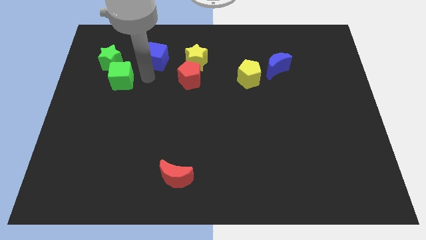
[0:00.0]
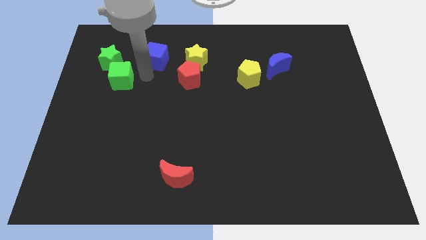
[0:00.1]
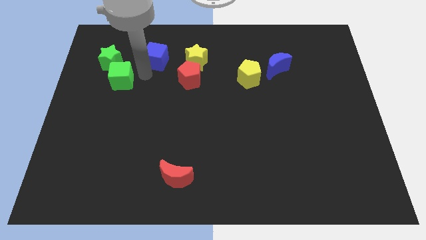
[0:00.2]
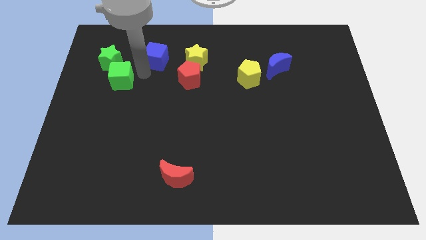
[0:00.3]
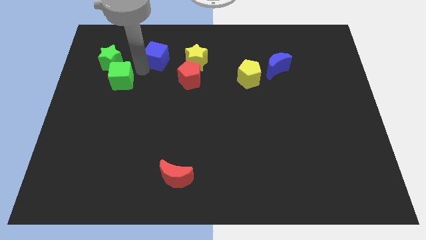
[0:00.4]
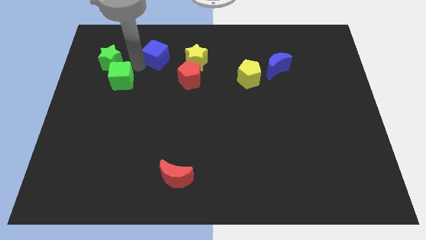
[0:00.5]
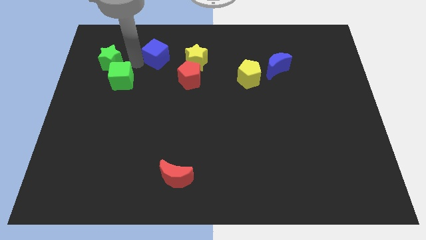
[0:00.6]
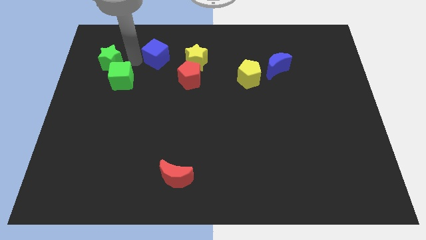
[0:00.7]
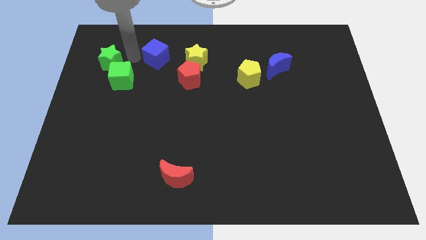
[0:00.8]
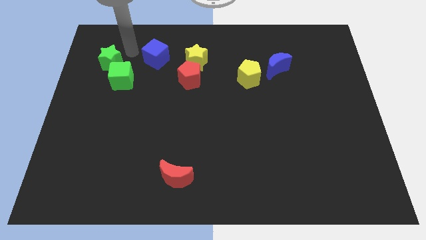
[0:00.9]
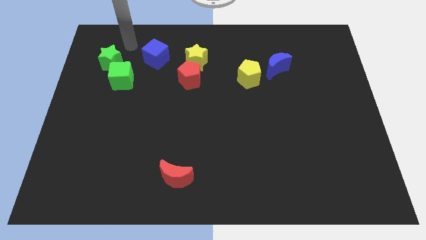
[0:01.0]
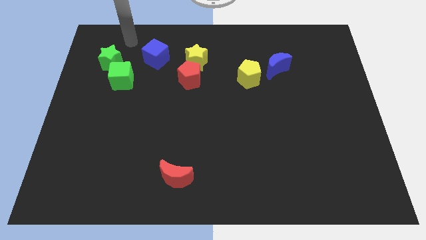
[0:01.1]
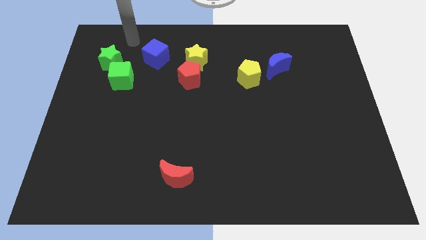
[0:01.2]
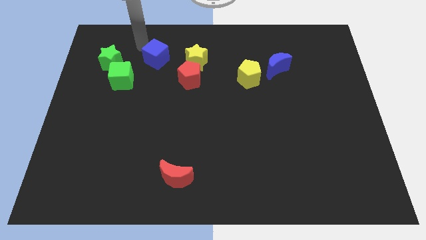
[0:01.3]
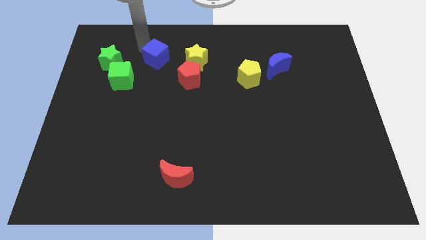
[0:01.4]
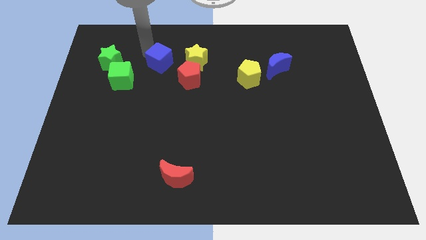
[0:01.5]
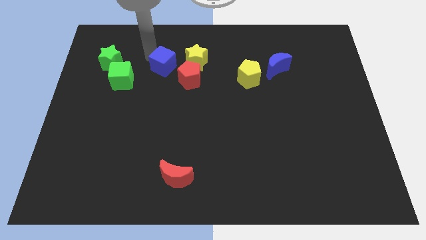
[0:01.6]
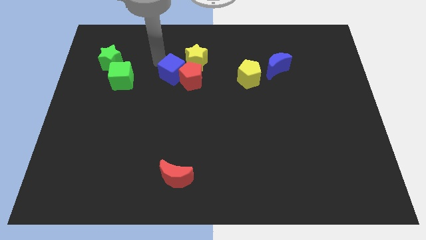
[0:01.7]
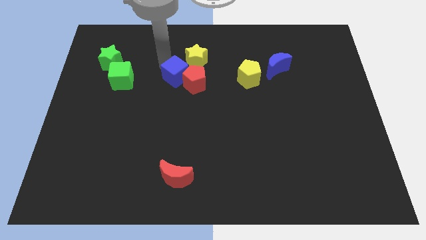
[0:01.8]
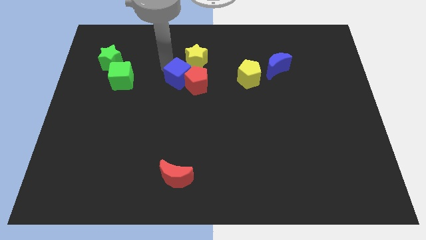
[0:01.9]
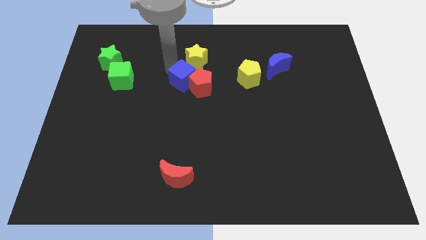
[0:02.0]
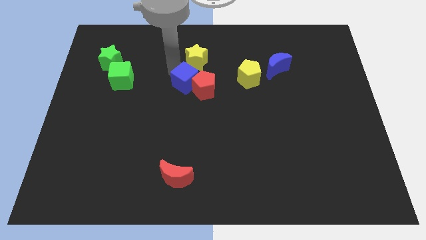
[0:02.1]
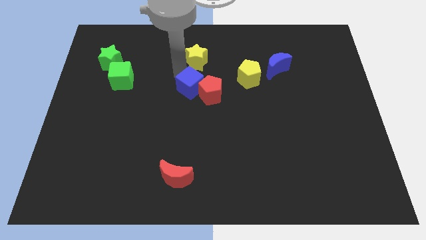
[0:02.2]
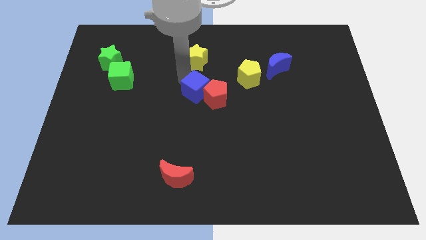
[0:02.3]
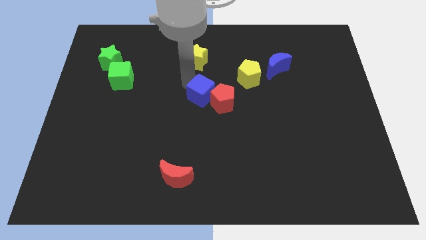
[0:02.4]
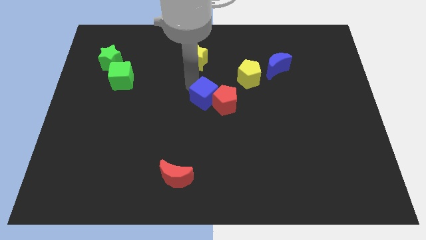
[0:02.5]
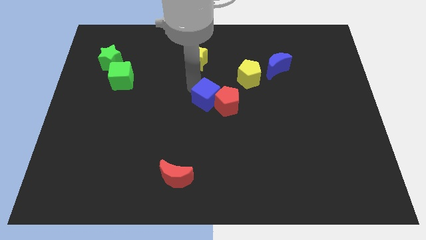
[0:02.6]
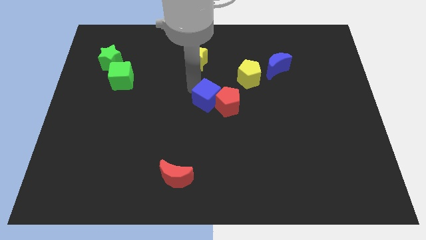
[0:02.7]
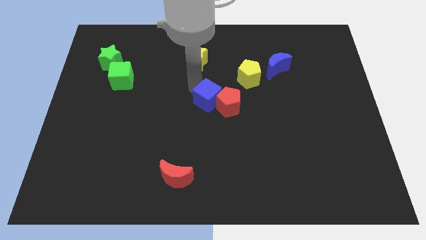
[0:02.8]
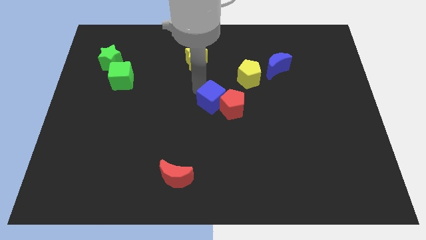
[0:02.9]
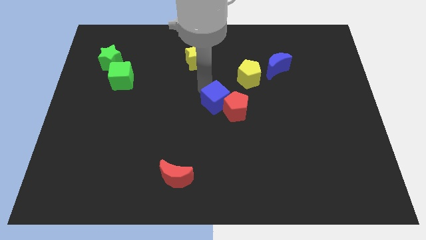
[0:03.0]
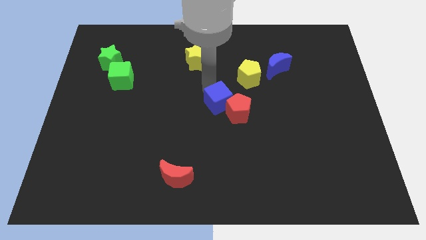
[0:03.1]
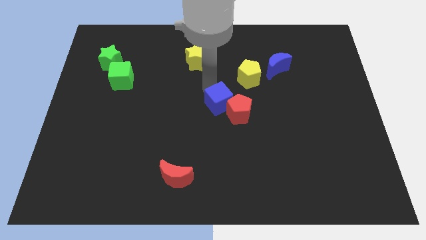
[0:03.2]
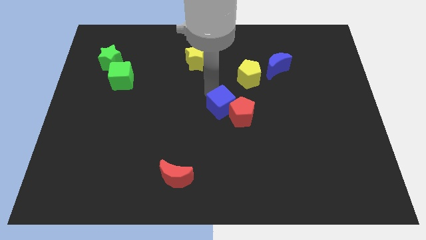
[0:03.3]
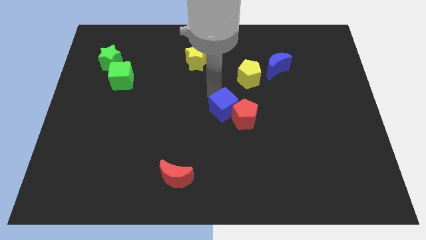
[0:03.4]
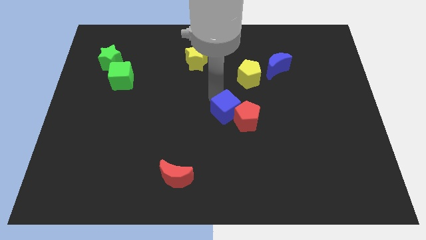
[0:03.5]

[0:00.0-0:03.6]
push blue cube to the center

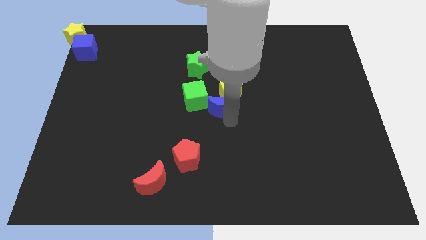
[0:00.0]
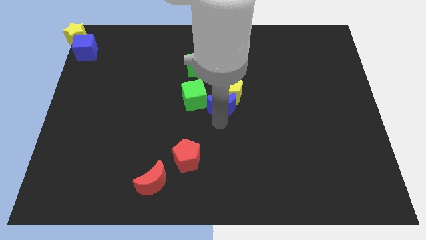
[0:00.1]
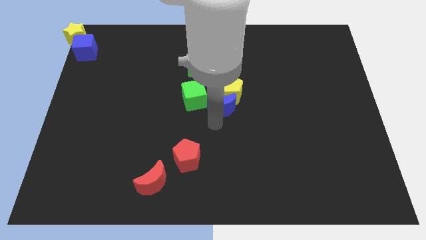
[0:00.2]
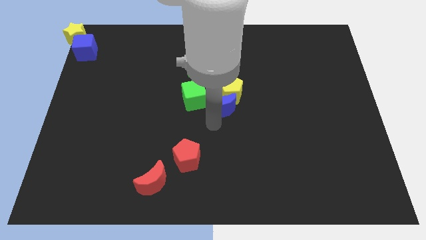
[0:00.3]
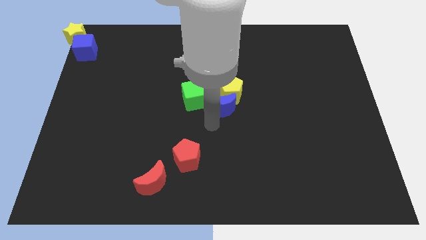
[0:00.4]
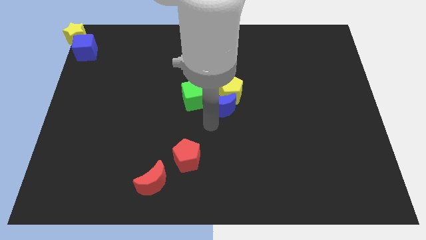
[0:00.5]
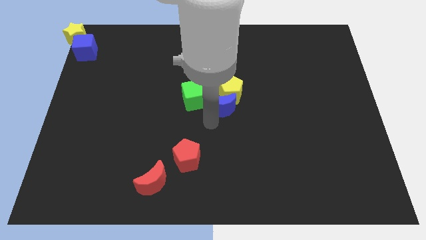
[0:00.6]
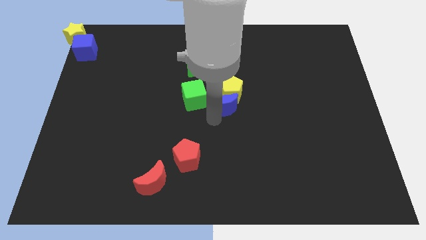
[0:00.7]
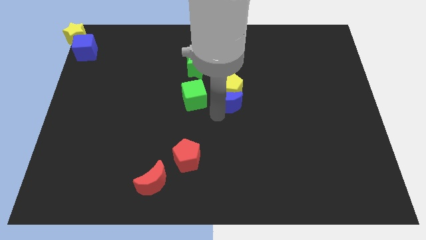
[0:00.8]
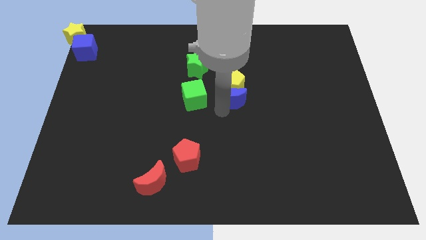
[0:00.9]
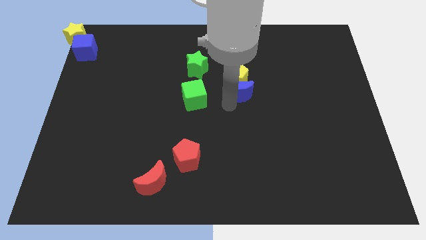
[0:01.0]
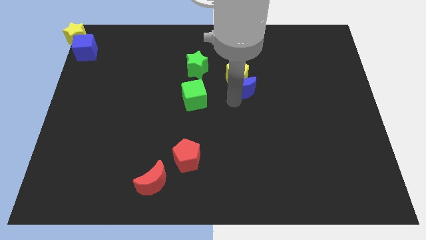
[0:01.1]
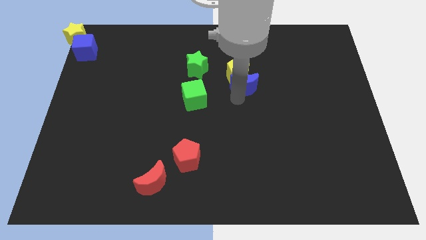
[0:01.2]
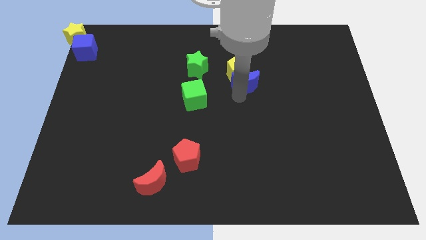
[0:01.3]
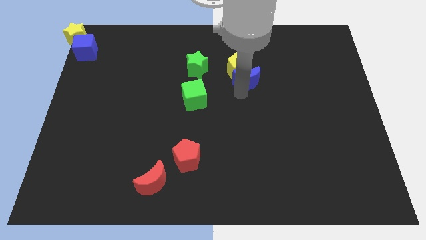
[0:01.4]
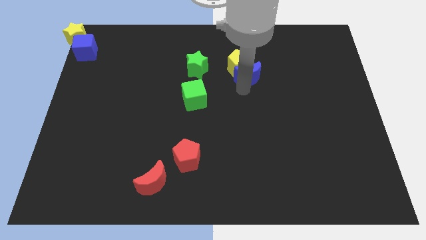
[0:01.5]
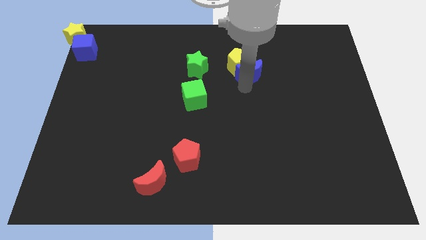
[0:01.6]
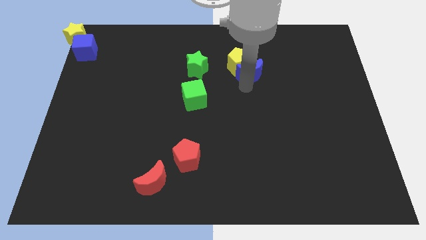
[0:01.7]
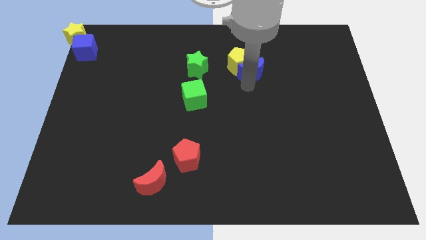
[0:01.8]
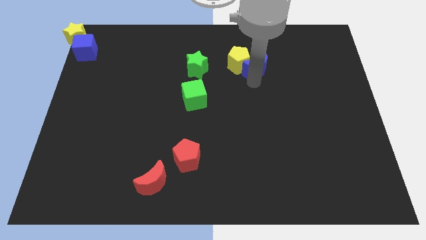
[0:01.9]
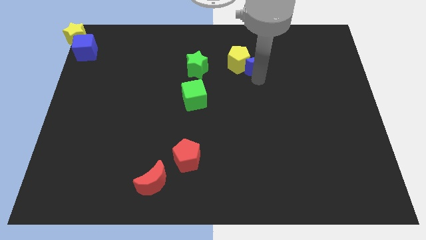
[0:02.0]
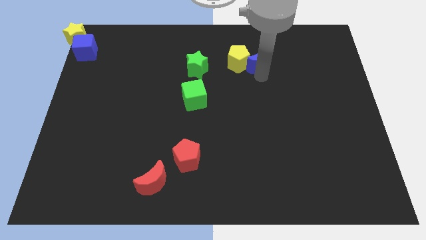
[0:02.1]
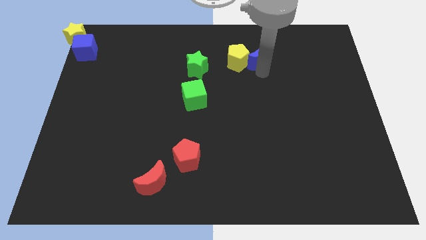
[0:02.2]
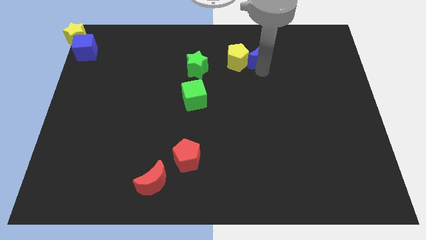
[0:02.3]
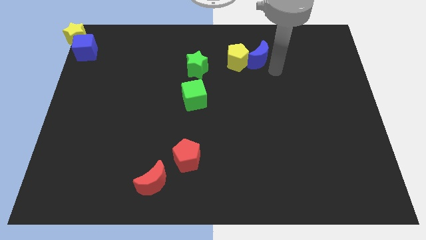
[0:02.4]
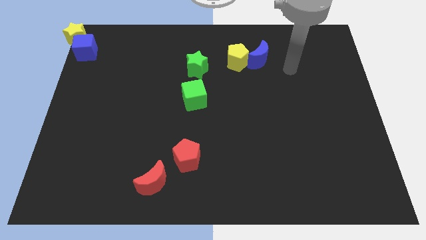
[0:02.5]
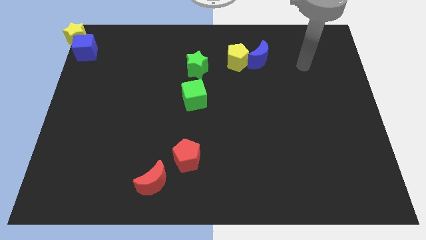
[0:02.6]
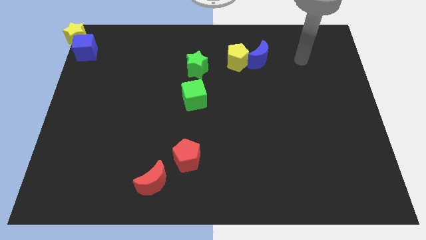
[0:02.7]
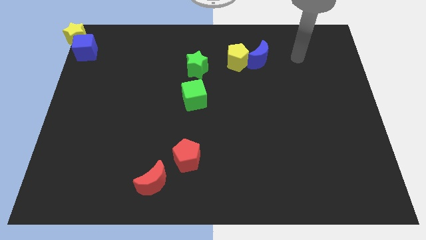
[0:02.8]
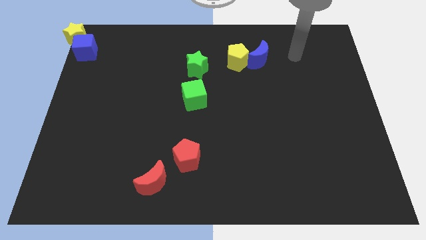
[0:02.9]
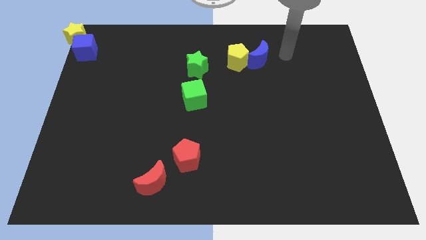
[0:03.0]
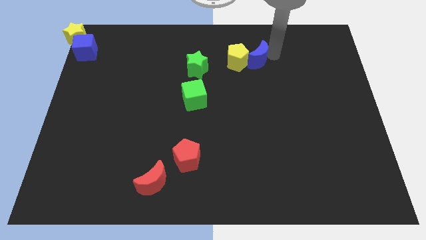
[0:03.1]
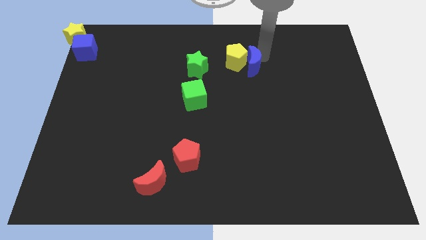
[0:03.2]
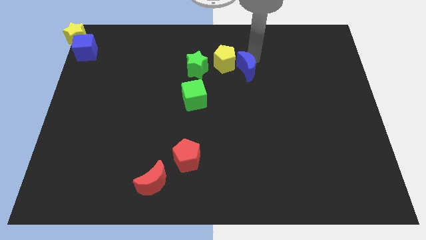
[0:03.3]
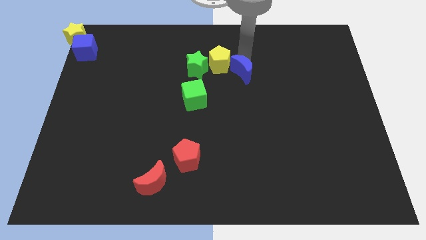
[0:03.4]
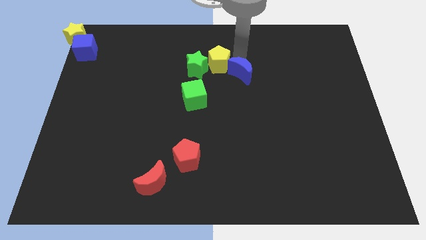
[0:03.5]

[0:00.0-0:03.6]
place yellow pentagon beside green star

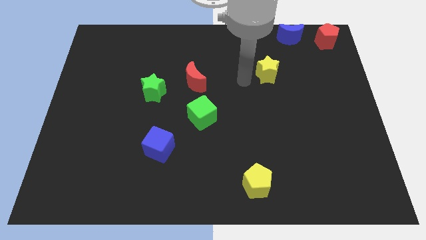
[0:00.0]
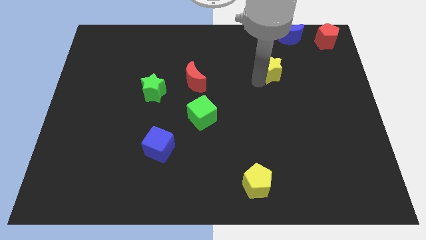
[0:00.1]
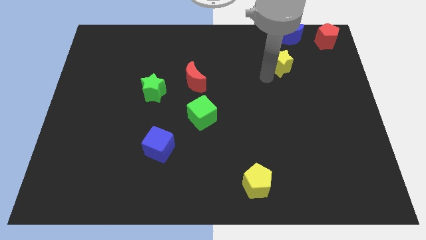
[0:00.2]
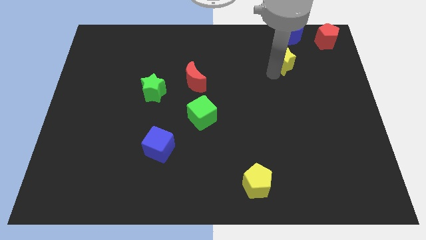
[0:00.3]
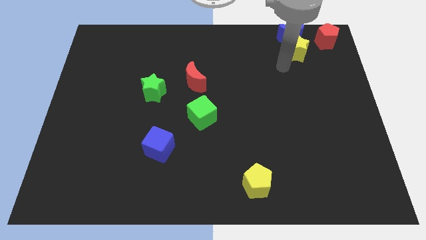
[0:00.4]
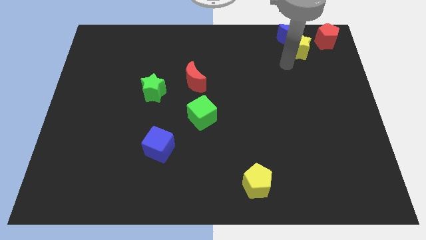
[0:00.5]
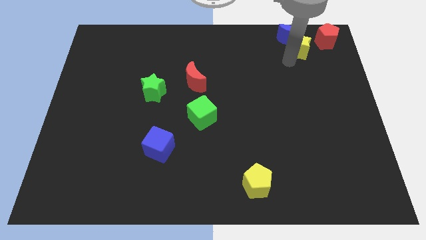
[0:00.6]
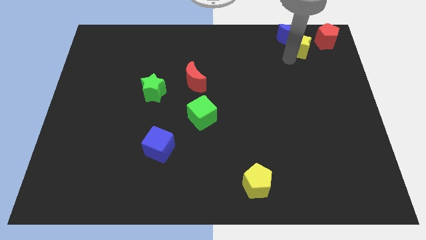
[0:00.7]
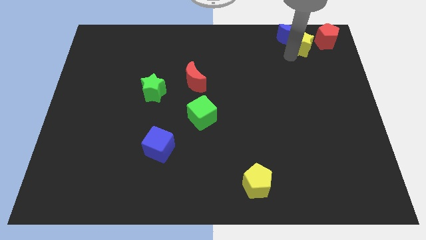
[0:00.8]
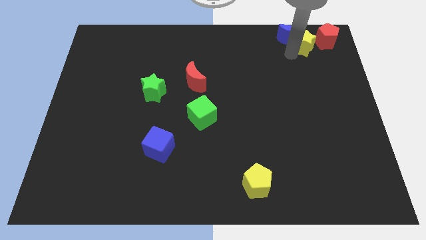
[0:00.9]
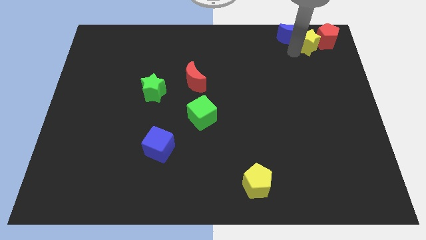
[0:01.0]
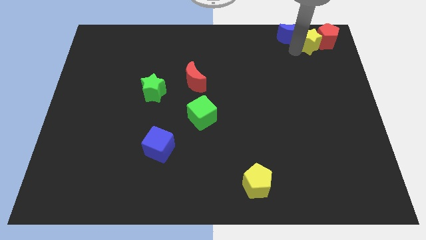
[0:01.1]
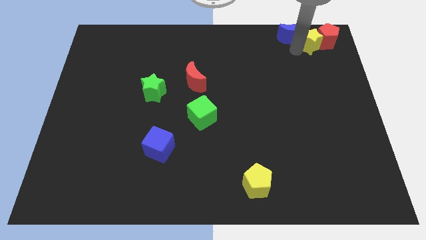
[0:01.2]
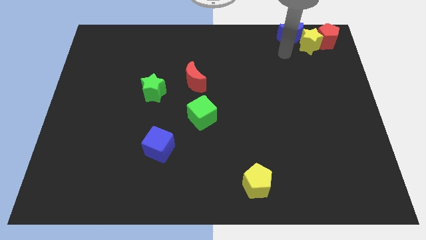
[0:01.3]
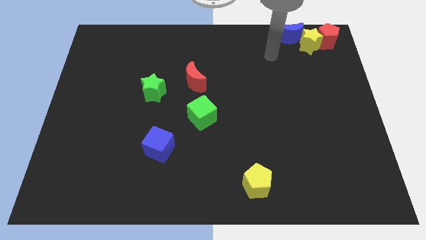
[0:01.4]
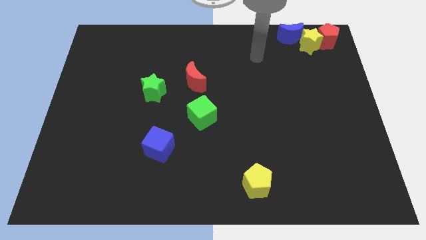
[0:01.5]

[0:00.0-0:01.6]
slide the yellow star close to the red pentagon
